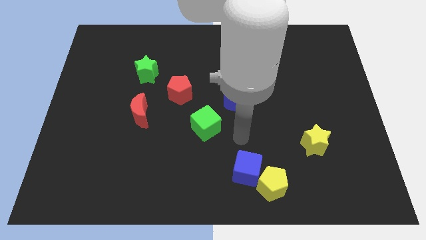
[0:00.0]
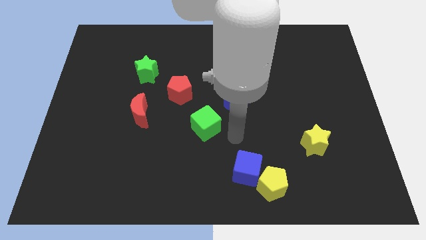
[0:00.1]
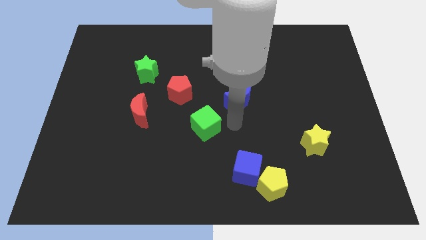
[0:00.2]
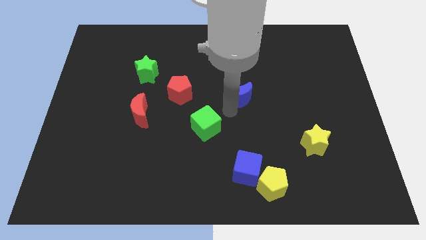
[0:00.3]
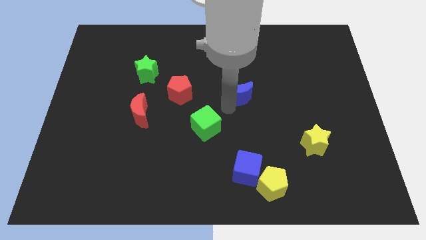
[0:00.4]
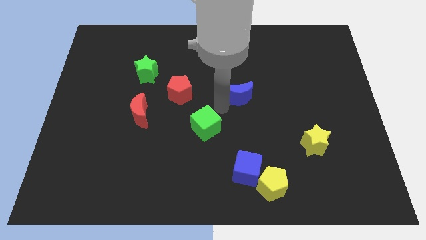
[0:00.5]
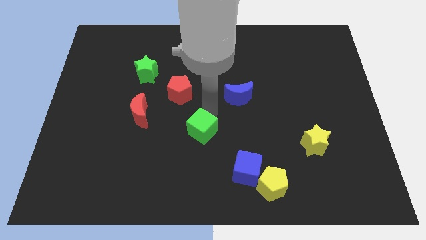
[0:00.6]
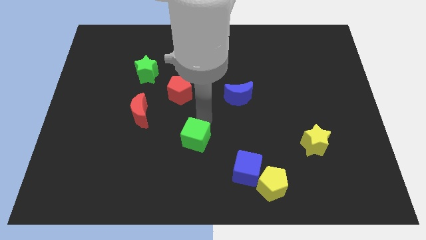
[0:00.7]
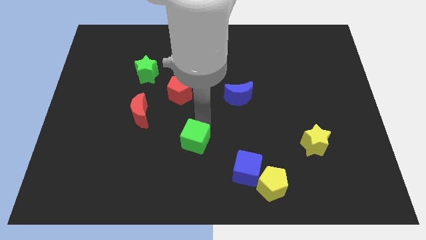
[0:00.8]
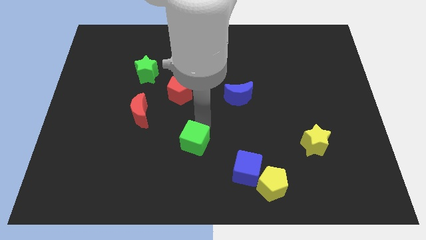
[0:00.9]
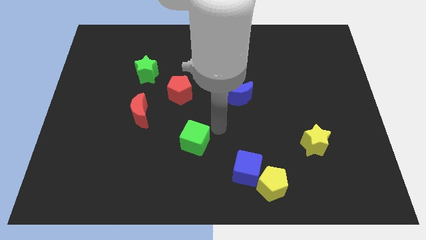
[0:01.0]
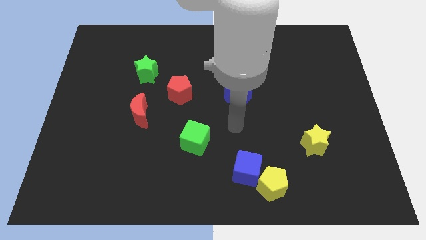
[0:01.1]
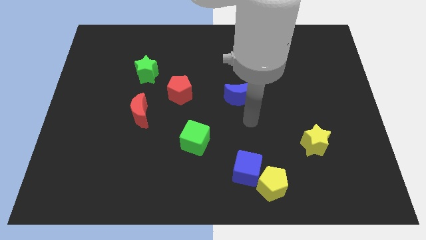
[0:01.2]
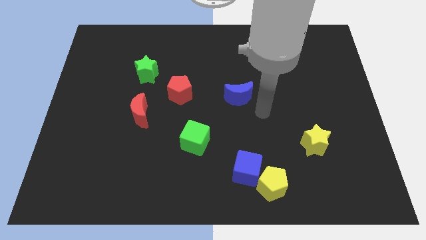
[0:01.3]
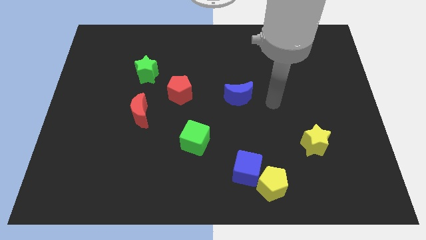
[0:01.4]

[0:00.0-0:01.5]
push the green cube slightly to the bottom

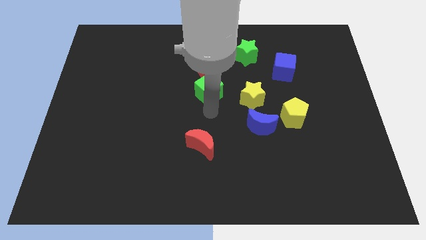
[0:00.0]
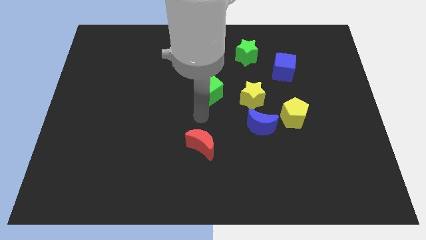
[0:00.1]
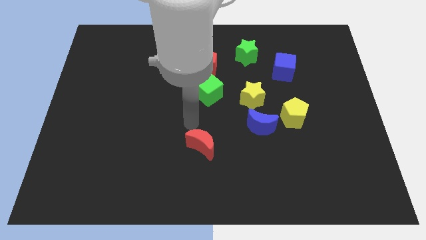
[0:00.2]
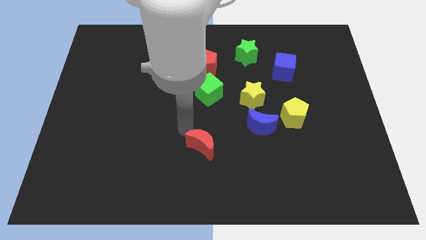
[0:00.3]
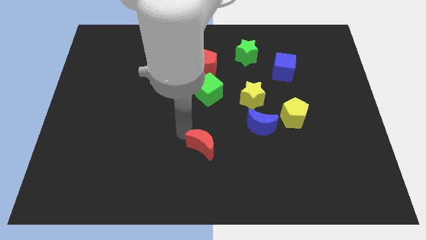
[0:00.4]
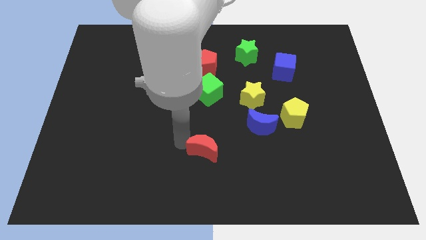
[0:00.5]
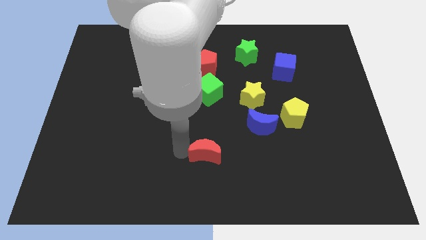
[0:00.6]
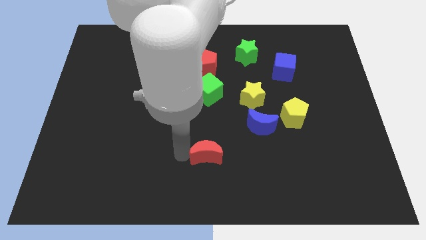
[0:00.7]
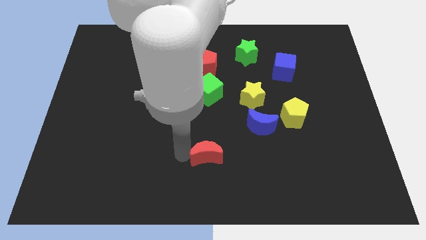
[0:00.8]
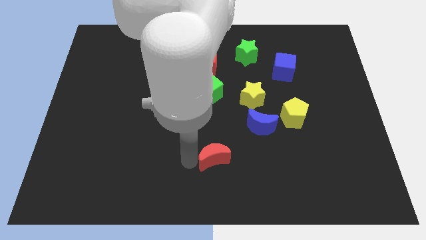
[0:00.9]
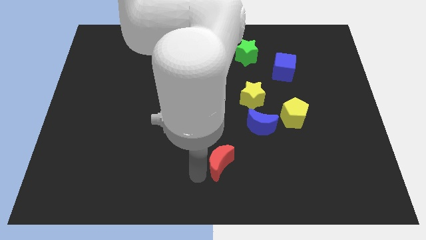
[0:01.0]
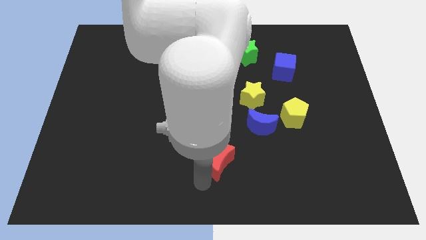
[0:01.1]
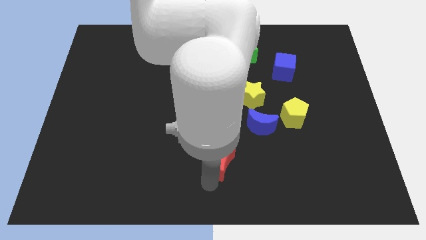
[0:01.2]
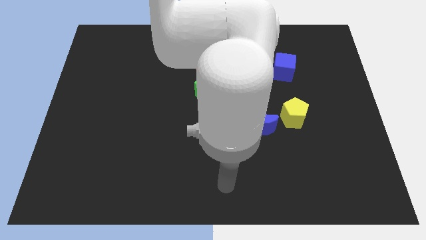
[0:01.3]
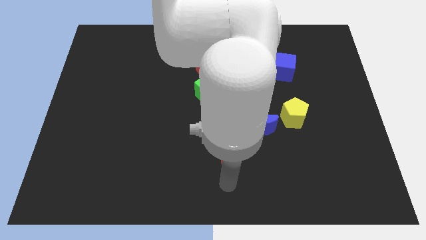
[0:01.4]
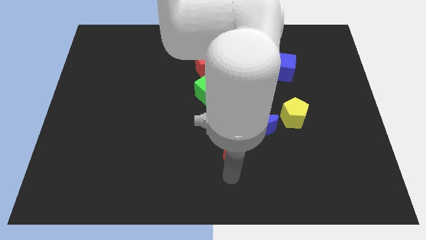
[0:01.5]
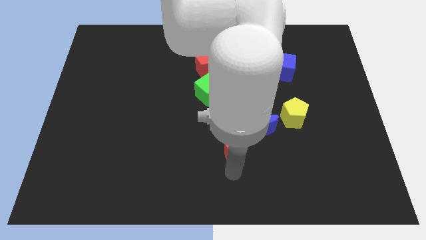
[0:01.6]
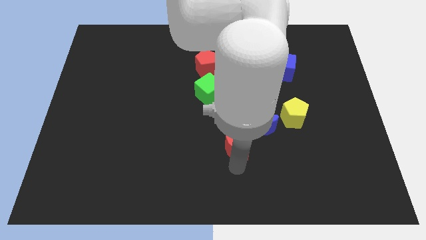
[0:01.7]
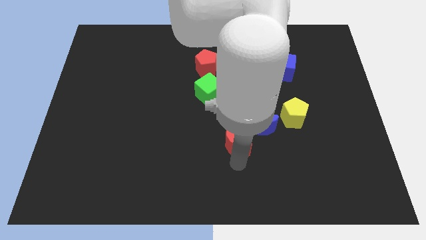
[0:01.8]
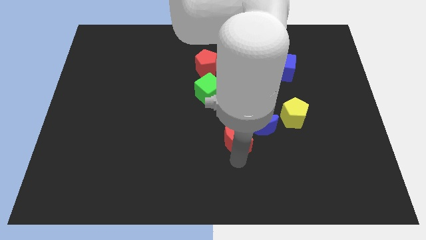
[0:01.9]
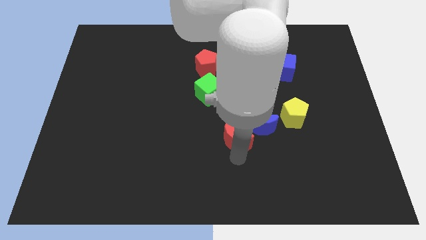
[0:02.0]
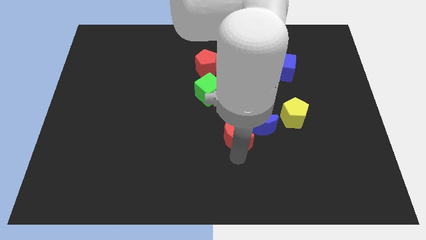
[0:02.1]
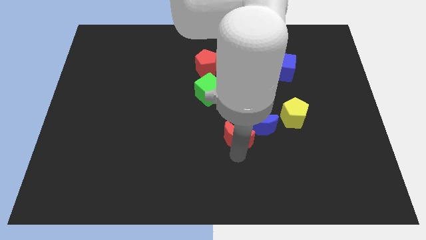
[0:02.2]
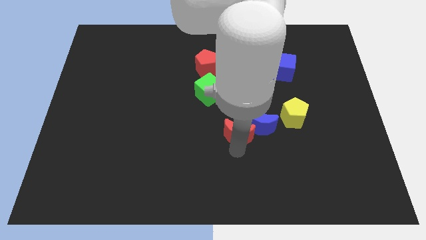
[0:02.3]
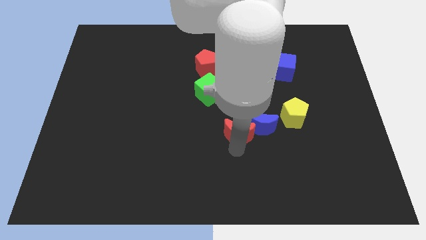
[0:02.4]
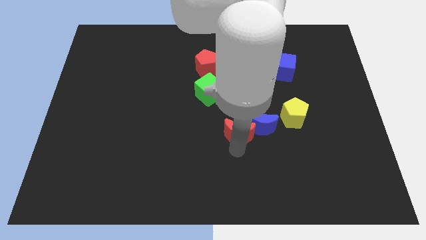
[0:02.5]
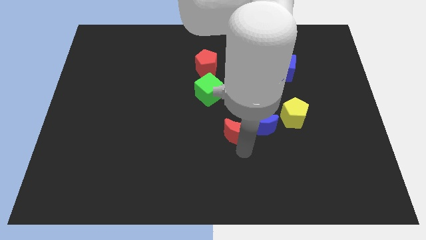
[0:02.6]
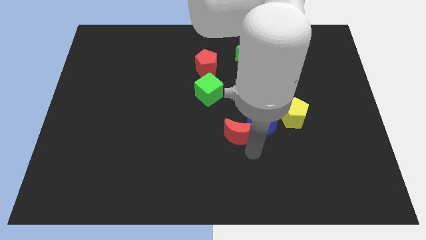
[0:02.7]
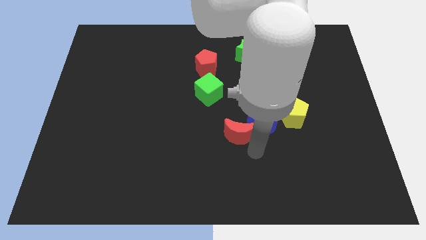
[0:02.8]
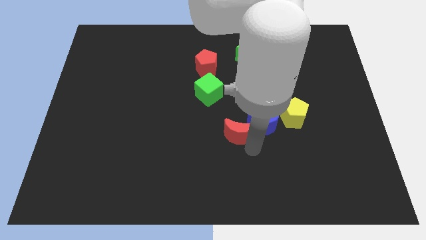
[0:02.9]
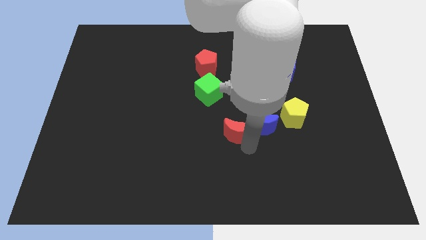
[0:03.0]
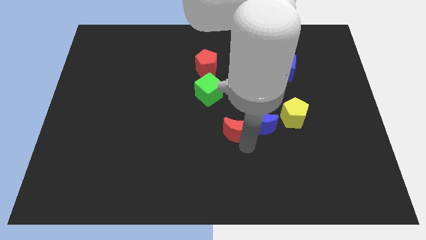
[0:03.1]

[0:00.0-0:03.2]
slide the red moon diagonally bottom right to the green cube

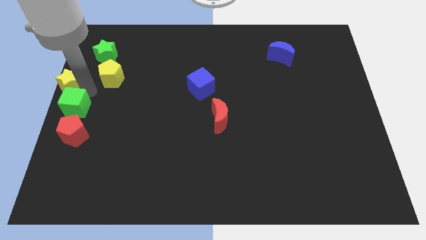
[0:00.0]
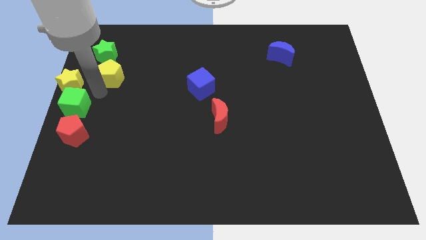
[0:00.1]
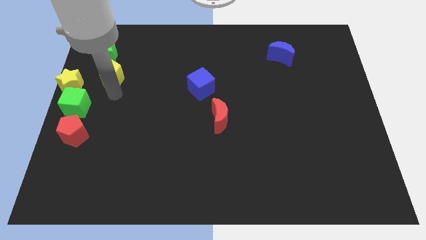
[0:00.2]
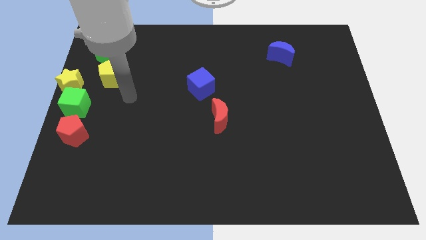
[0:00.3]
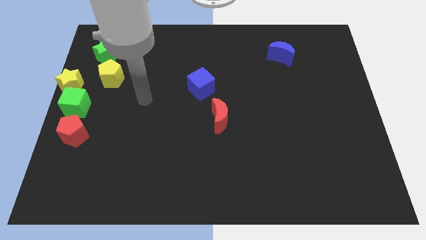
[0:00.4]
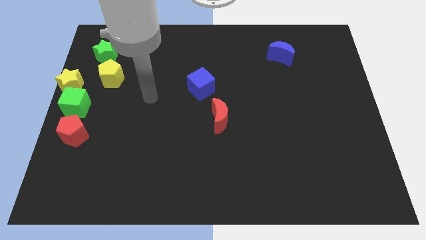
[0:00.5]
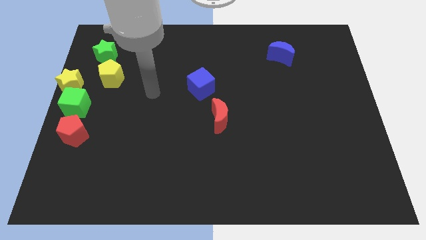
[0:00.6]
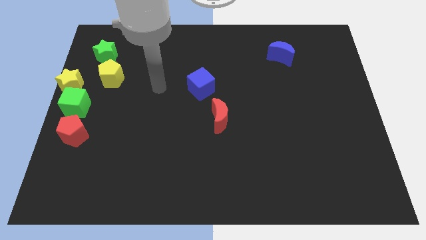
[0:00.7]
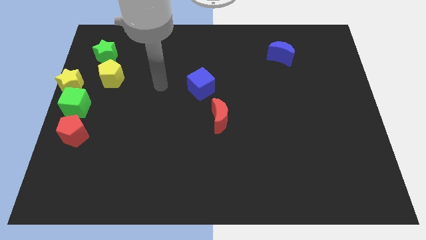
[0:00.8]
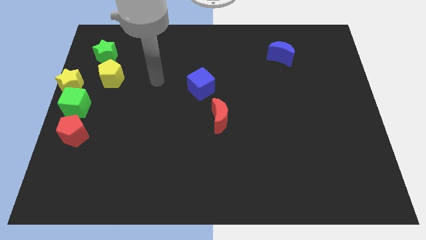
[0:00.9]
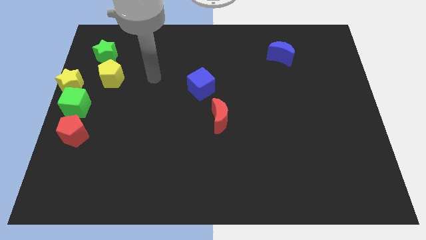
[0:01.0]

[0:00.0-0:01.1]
move your arm away from the yellow star

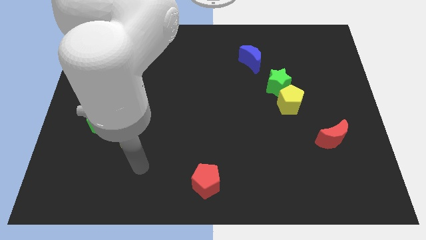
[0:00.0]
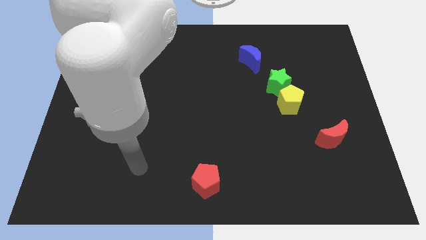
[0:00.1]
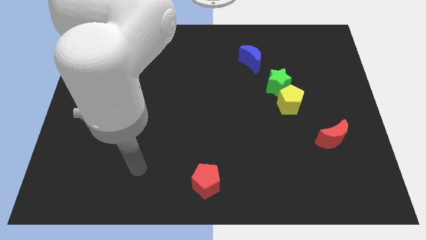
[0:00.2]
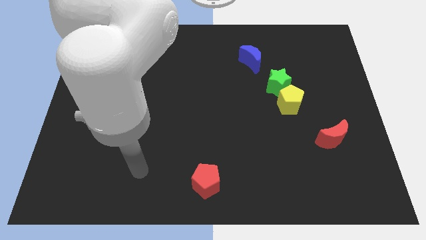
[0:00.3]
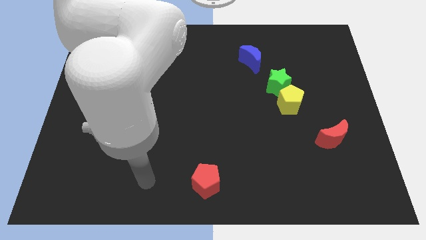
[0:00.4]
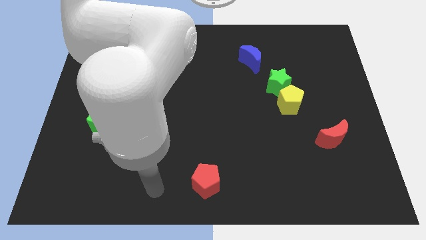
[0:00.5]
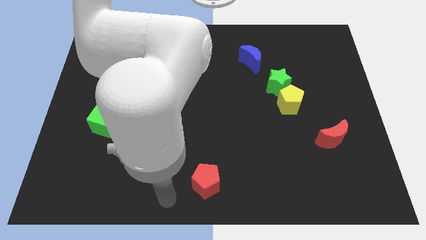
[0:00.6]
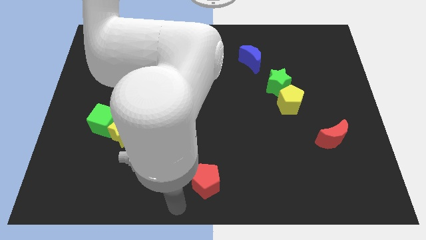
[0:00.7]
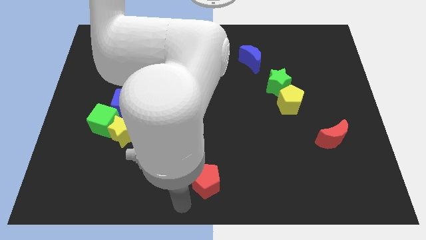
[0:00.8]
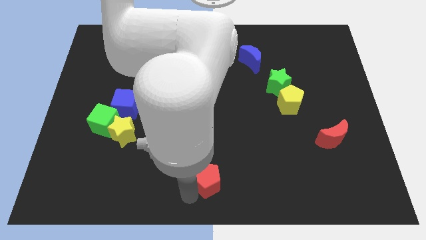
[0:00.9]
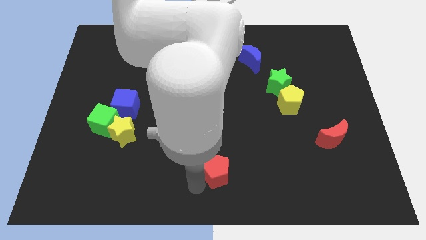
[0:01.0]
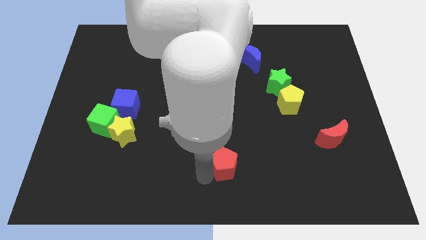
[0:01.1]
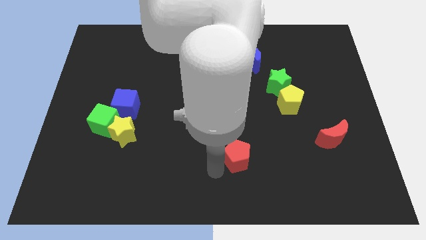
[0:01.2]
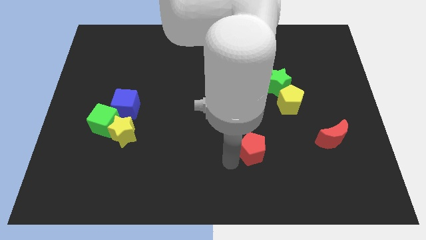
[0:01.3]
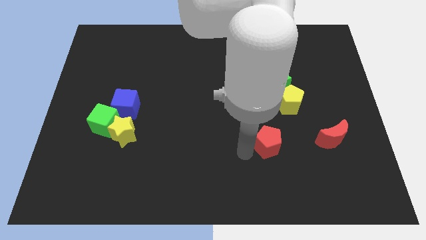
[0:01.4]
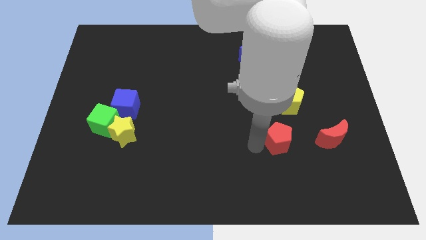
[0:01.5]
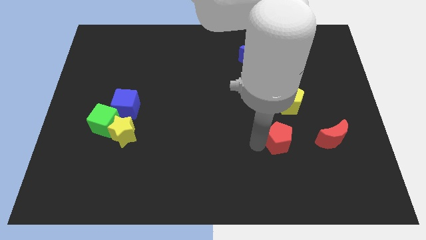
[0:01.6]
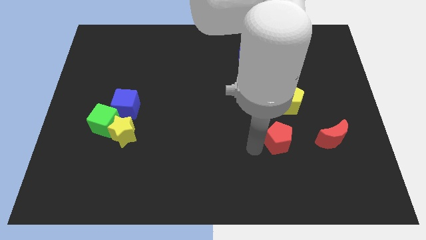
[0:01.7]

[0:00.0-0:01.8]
push the red pentagon towards the red crescent

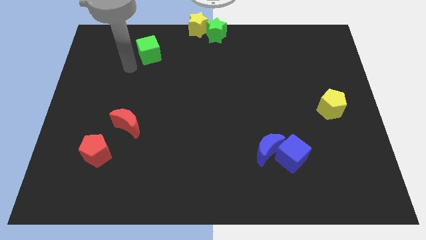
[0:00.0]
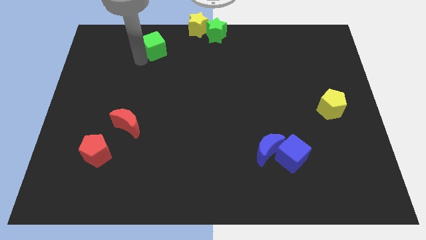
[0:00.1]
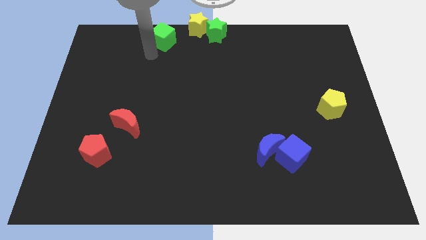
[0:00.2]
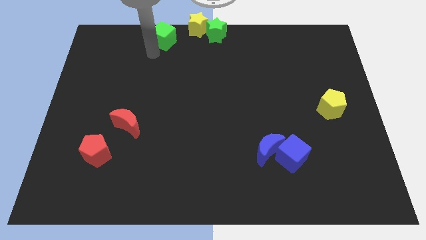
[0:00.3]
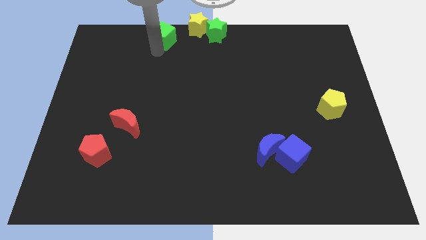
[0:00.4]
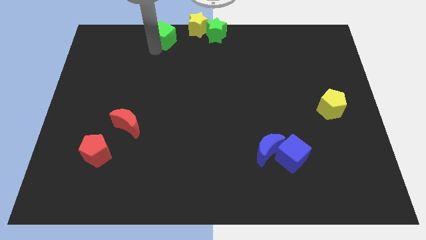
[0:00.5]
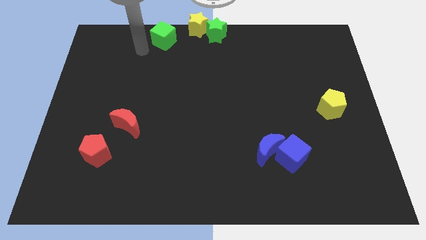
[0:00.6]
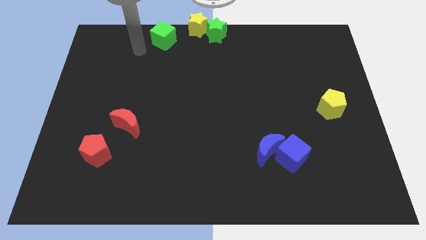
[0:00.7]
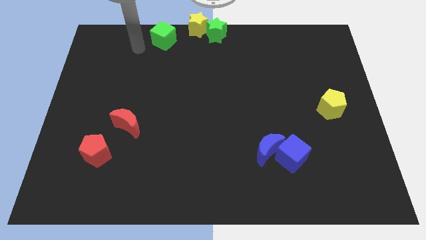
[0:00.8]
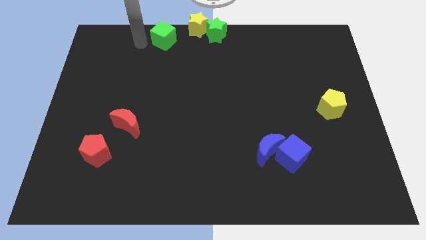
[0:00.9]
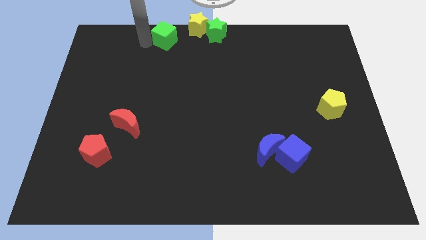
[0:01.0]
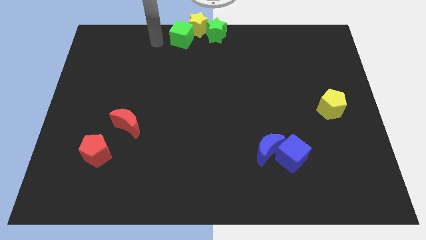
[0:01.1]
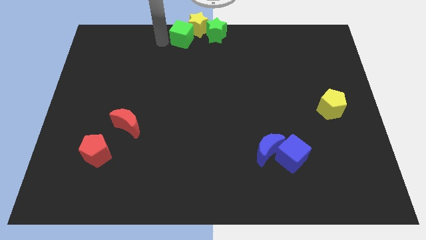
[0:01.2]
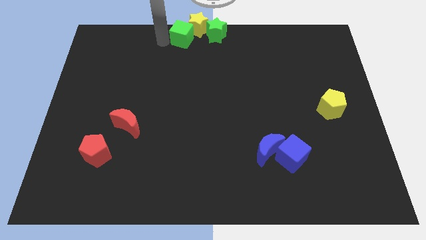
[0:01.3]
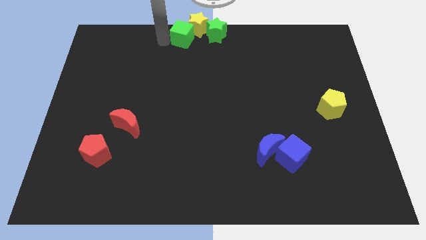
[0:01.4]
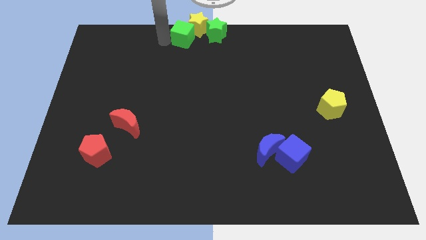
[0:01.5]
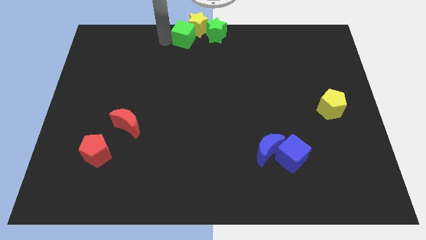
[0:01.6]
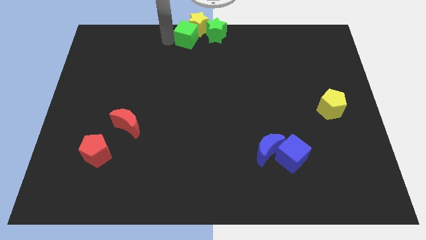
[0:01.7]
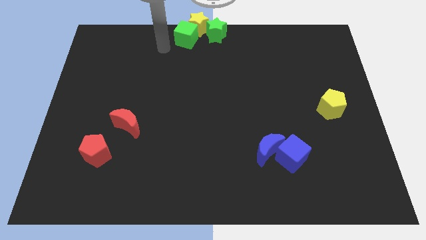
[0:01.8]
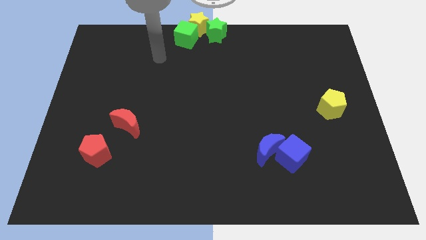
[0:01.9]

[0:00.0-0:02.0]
push the green cube to the top center
